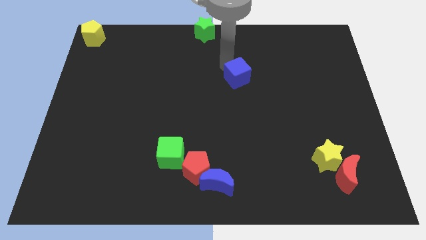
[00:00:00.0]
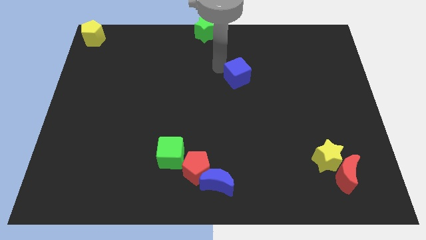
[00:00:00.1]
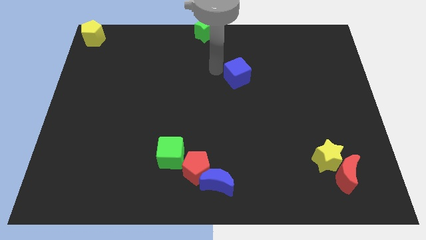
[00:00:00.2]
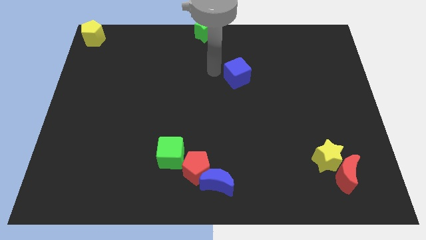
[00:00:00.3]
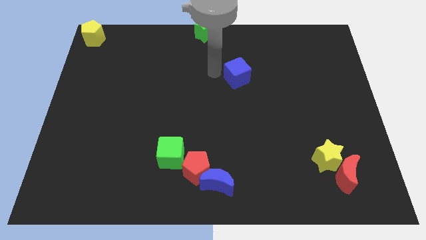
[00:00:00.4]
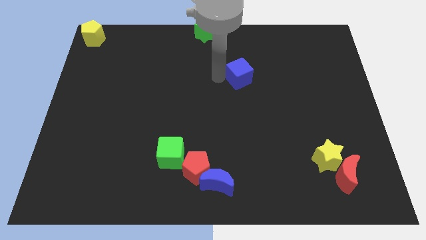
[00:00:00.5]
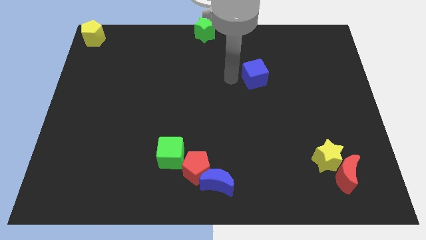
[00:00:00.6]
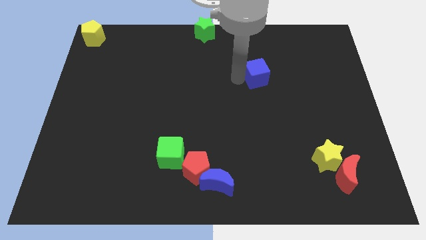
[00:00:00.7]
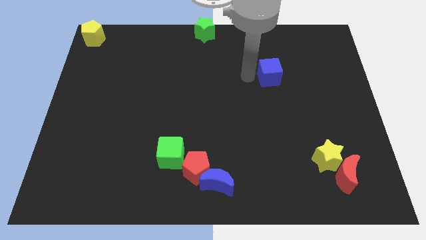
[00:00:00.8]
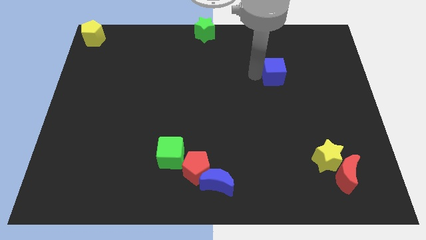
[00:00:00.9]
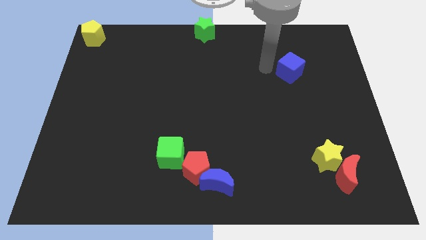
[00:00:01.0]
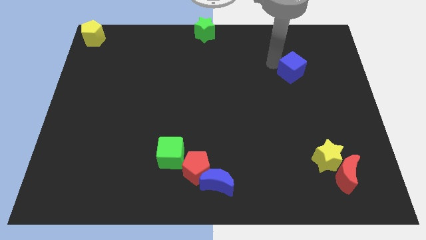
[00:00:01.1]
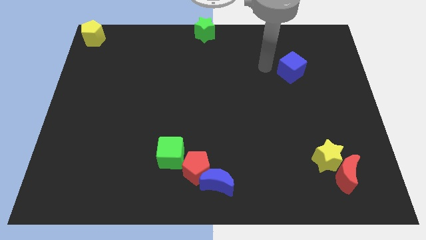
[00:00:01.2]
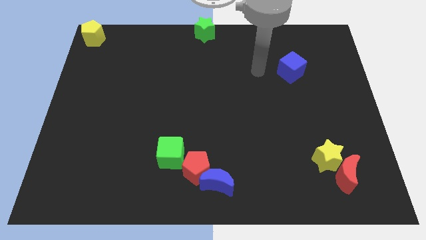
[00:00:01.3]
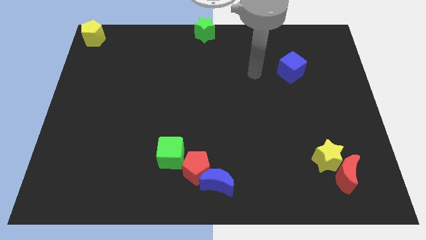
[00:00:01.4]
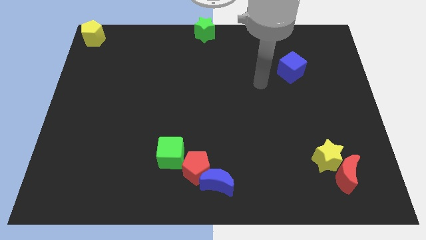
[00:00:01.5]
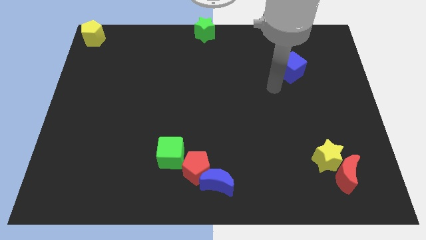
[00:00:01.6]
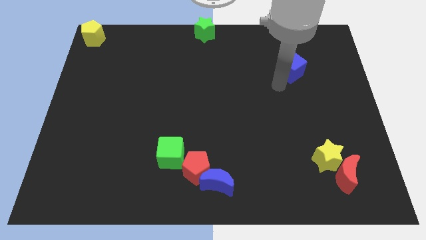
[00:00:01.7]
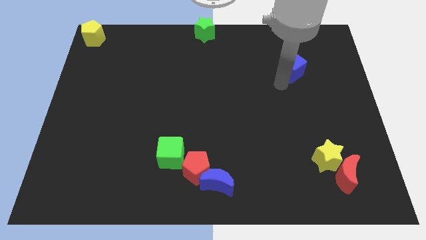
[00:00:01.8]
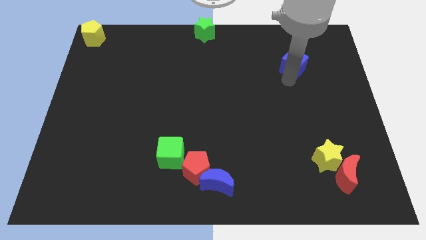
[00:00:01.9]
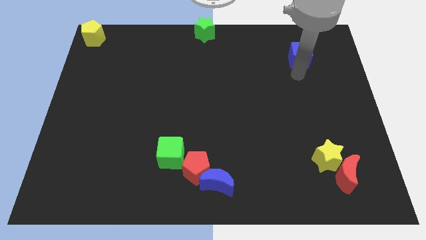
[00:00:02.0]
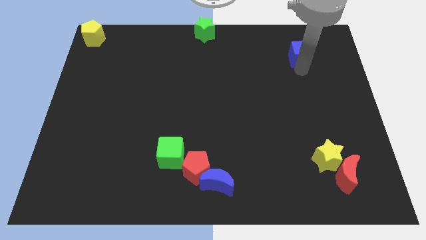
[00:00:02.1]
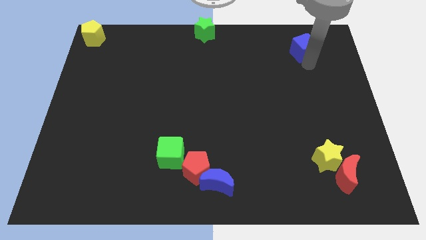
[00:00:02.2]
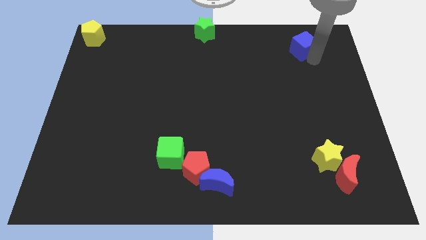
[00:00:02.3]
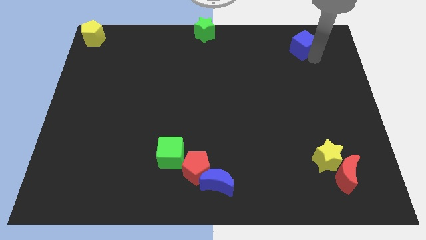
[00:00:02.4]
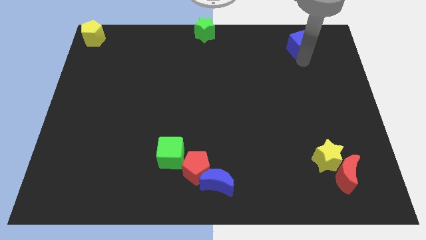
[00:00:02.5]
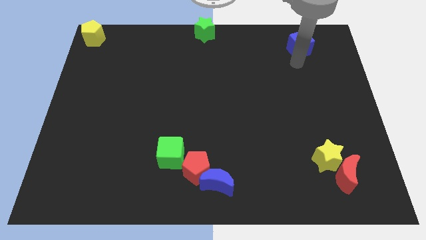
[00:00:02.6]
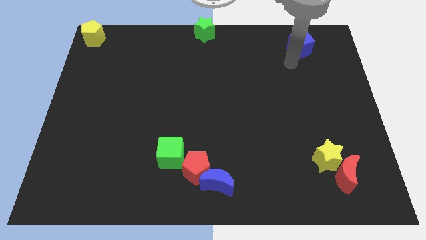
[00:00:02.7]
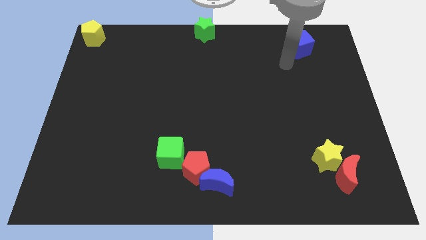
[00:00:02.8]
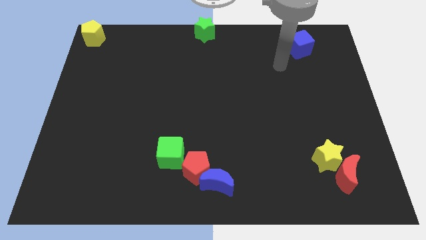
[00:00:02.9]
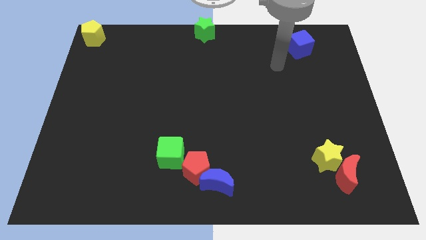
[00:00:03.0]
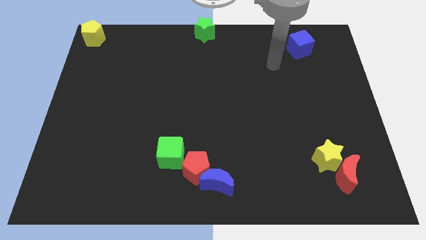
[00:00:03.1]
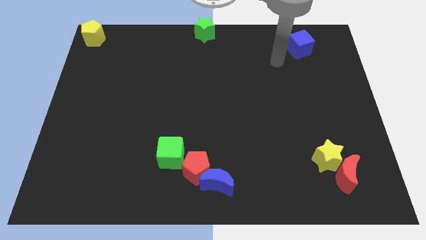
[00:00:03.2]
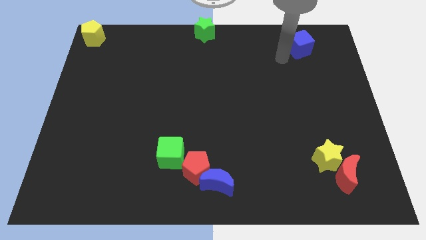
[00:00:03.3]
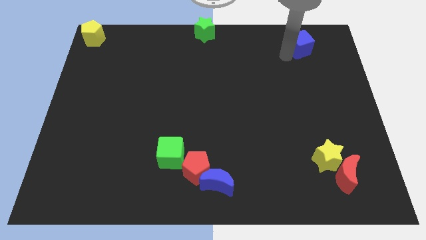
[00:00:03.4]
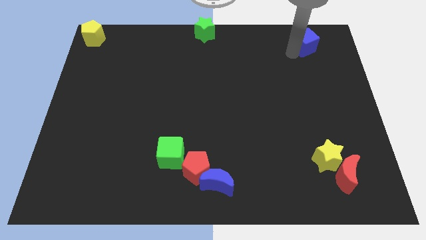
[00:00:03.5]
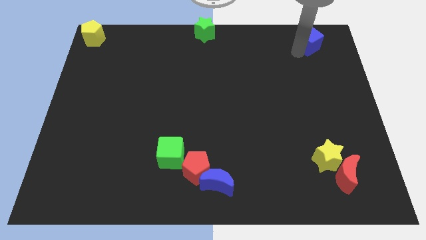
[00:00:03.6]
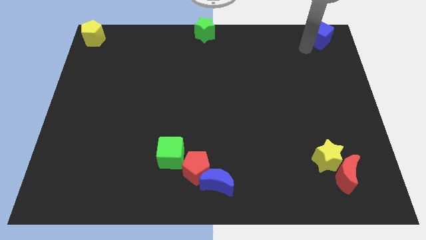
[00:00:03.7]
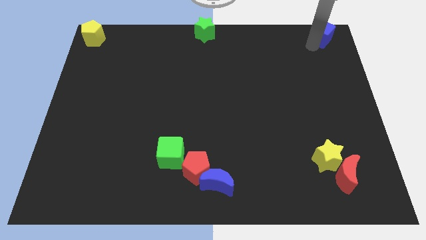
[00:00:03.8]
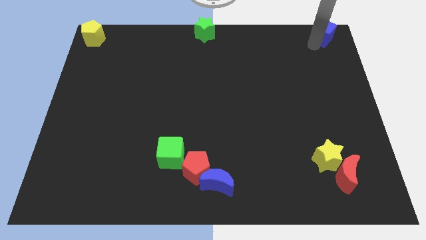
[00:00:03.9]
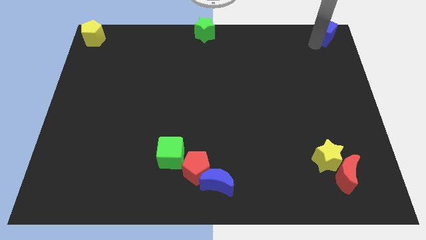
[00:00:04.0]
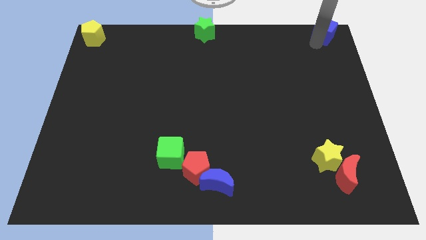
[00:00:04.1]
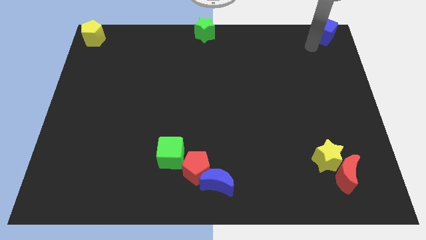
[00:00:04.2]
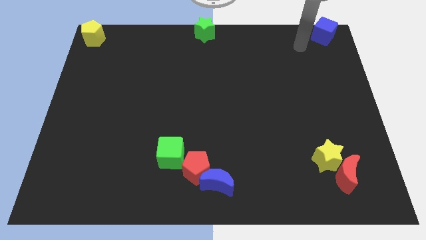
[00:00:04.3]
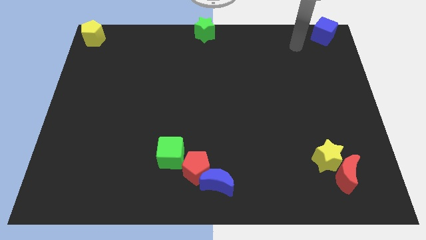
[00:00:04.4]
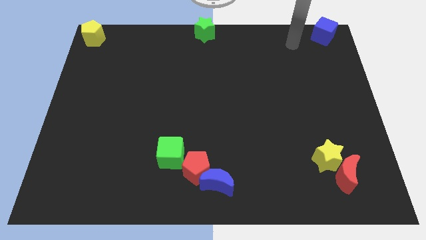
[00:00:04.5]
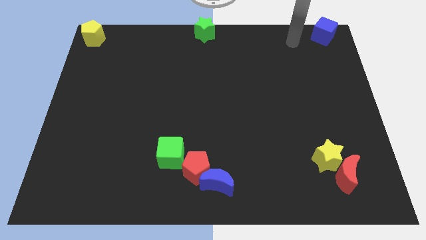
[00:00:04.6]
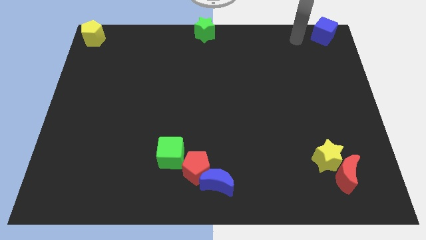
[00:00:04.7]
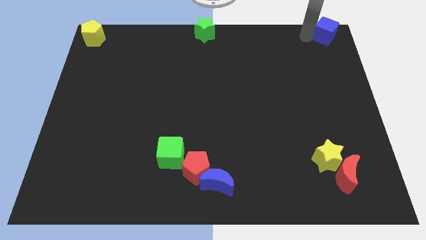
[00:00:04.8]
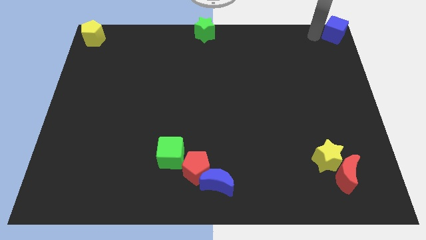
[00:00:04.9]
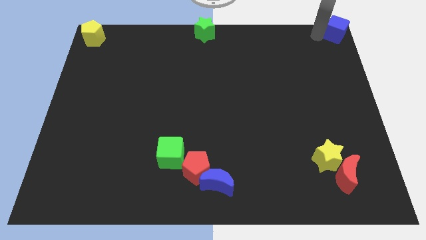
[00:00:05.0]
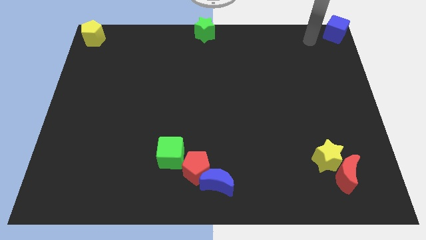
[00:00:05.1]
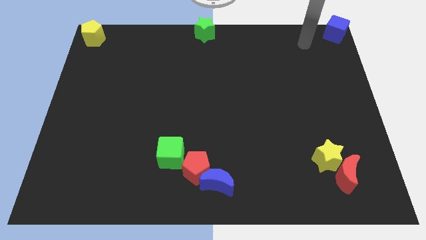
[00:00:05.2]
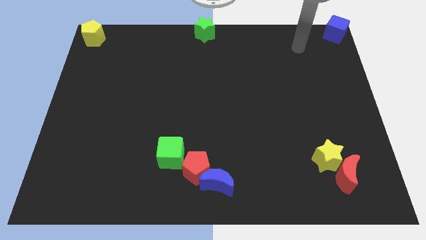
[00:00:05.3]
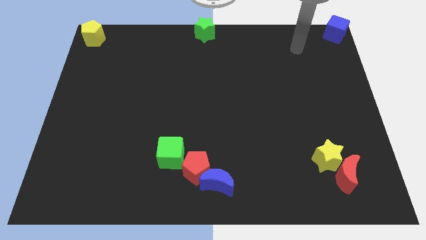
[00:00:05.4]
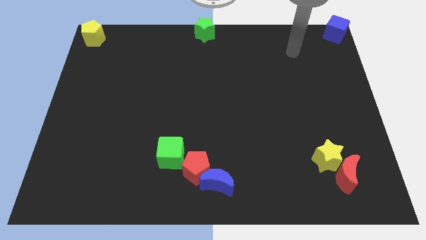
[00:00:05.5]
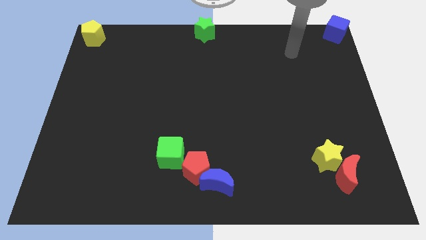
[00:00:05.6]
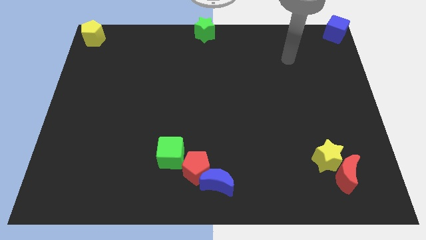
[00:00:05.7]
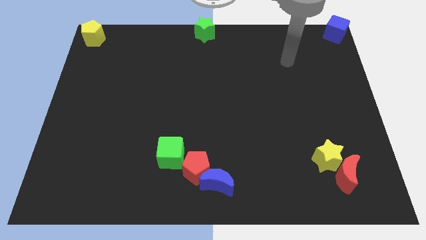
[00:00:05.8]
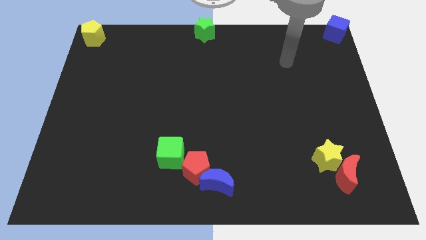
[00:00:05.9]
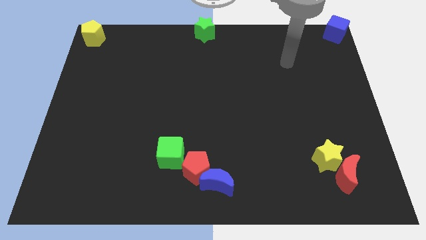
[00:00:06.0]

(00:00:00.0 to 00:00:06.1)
place blue cube in the top right corner

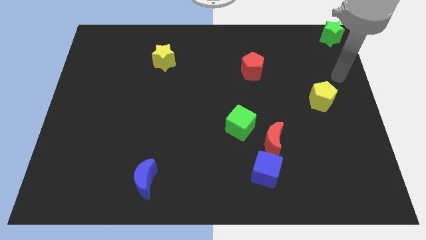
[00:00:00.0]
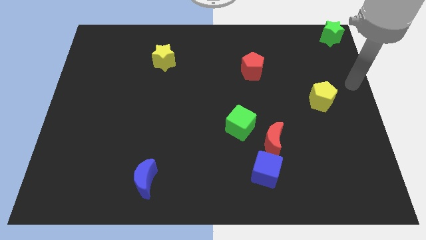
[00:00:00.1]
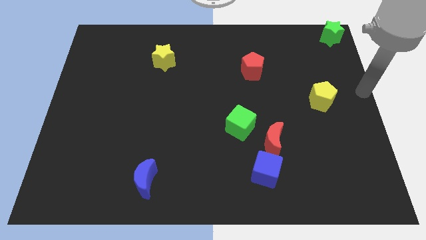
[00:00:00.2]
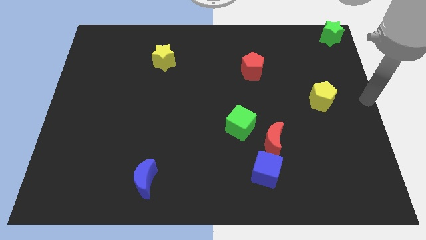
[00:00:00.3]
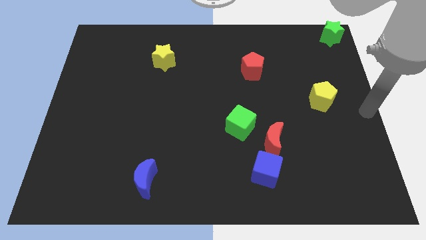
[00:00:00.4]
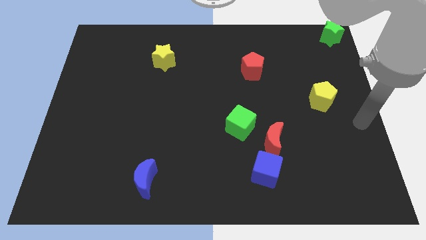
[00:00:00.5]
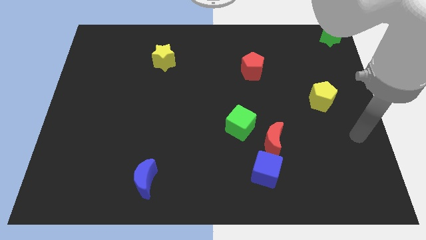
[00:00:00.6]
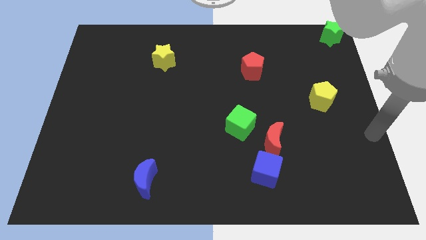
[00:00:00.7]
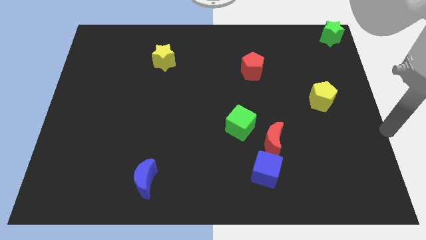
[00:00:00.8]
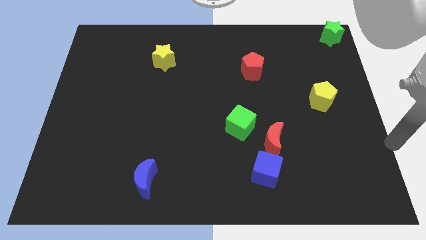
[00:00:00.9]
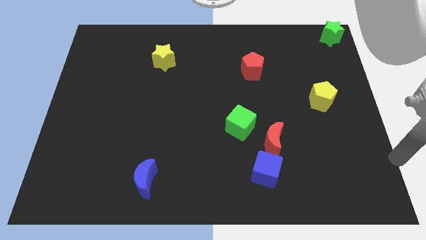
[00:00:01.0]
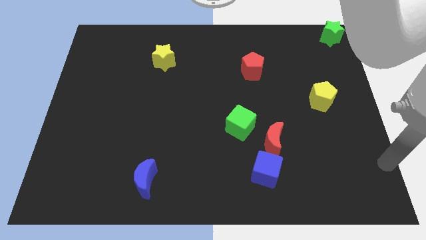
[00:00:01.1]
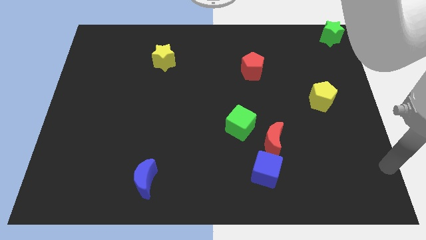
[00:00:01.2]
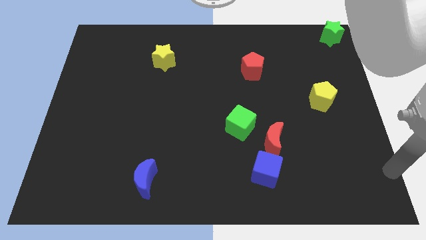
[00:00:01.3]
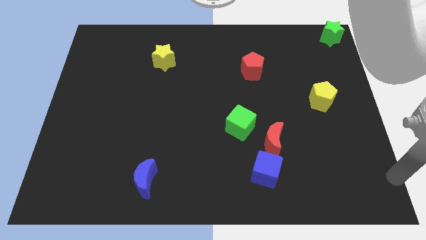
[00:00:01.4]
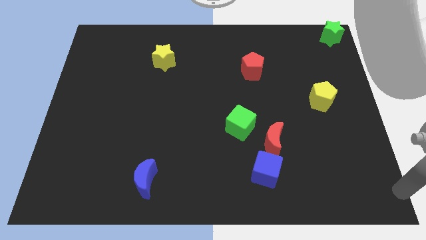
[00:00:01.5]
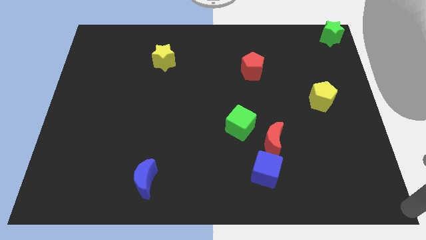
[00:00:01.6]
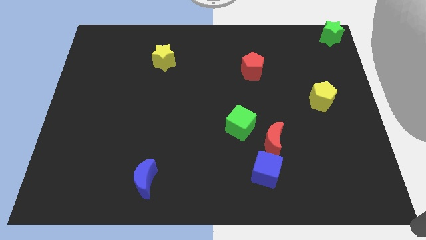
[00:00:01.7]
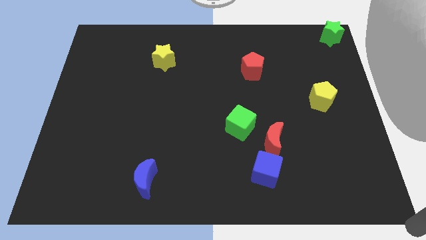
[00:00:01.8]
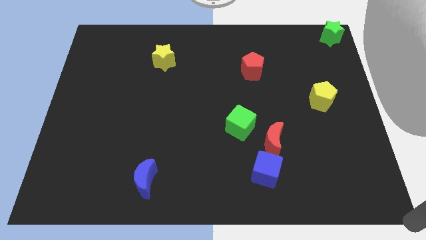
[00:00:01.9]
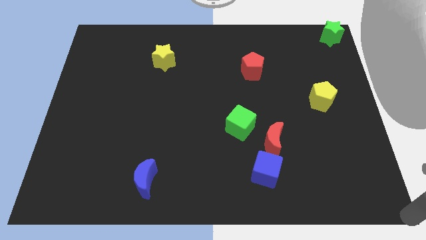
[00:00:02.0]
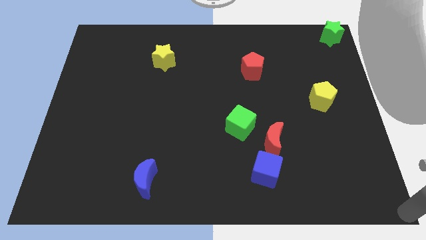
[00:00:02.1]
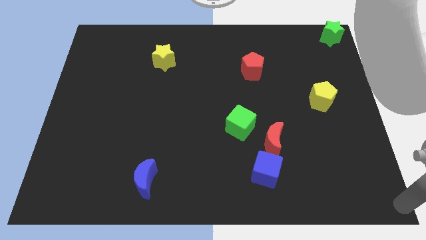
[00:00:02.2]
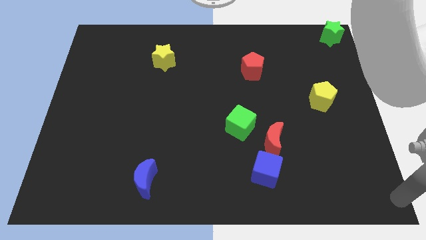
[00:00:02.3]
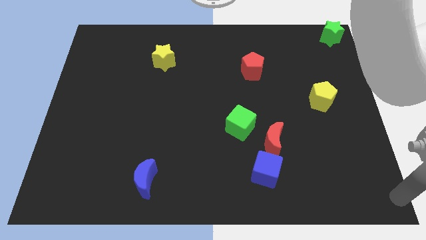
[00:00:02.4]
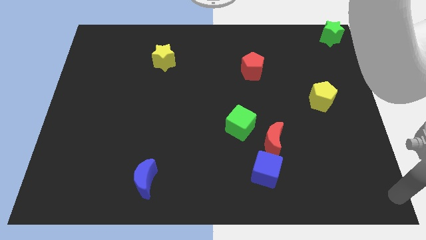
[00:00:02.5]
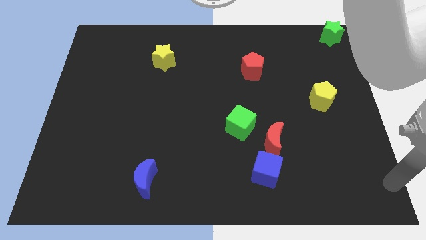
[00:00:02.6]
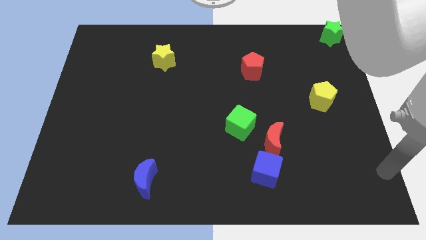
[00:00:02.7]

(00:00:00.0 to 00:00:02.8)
drag your arm to the bottom right

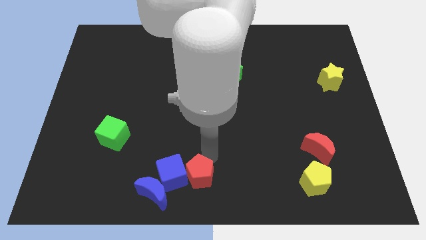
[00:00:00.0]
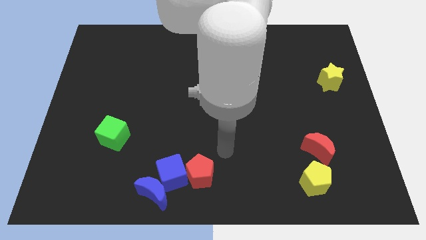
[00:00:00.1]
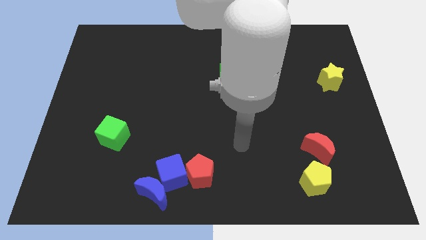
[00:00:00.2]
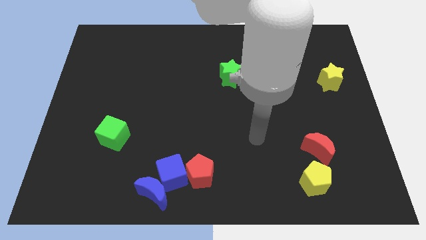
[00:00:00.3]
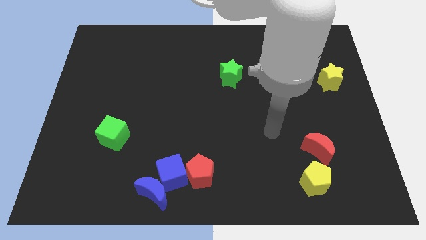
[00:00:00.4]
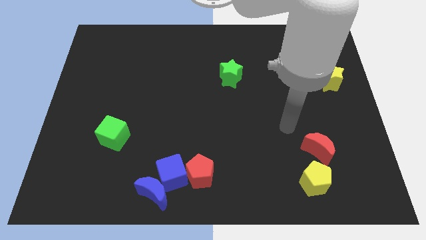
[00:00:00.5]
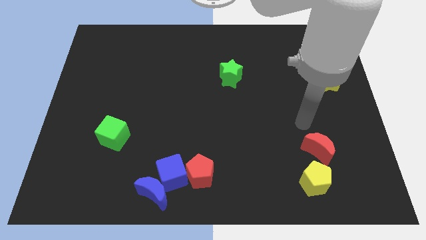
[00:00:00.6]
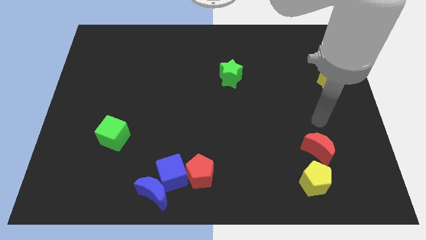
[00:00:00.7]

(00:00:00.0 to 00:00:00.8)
move the arm towards the top of the red crescent
